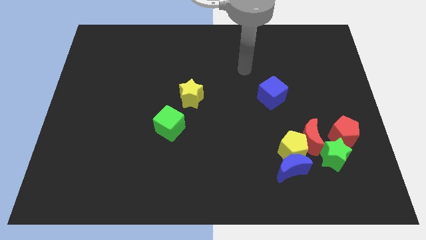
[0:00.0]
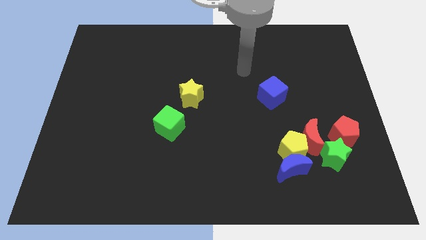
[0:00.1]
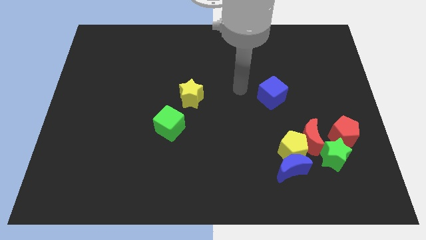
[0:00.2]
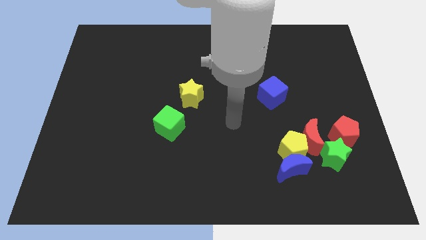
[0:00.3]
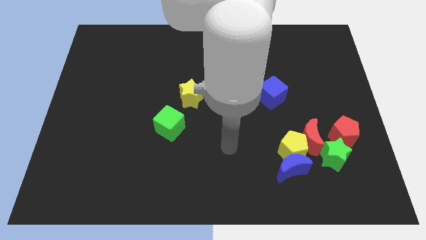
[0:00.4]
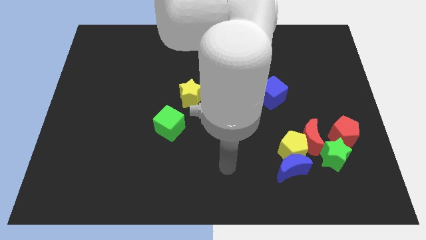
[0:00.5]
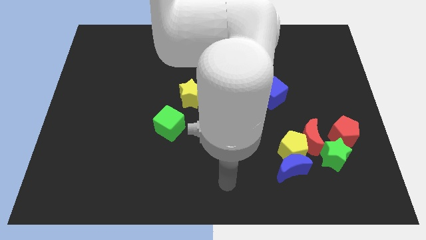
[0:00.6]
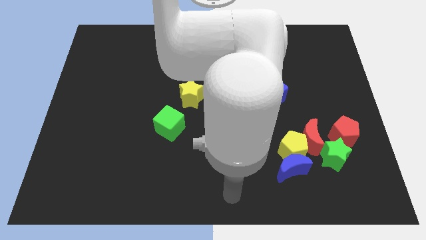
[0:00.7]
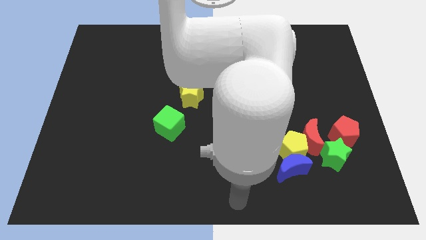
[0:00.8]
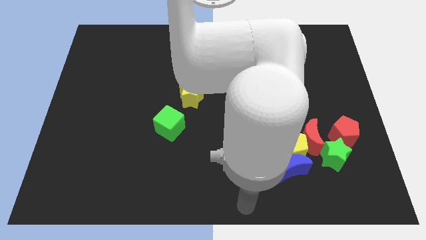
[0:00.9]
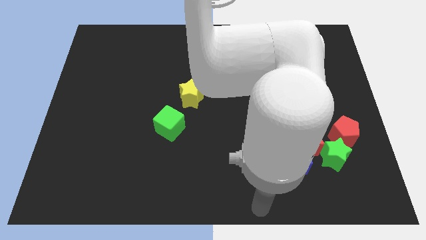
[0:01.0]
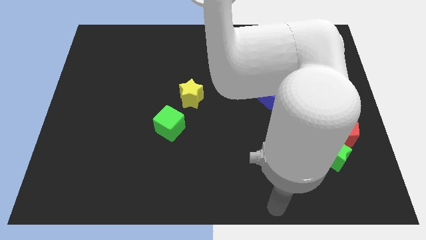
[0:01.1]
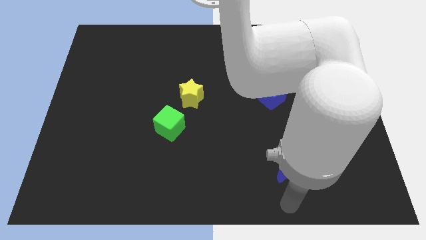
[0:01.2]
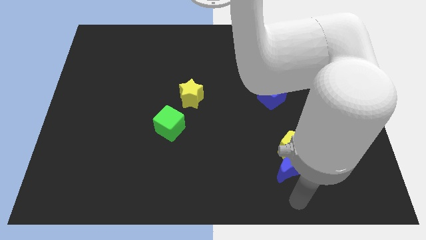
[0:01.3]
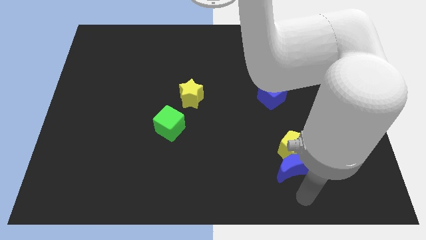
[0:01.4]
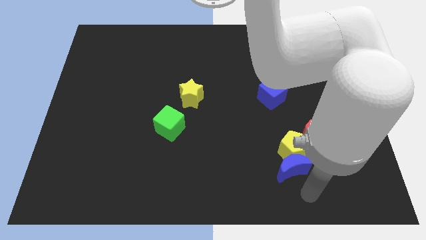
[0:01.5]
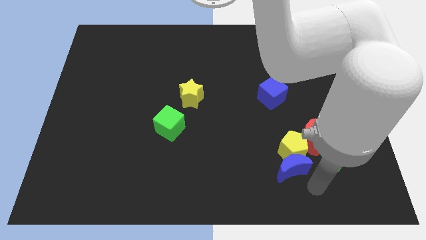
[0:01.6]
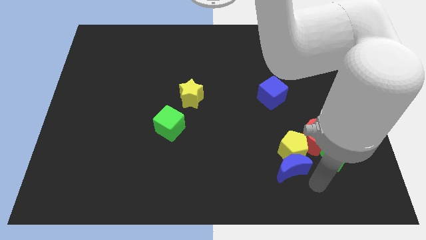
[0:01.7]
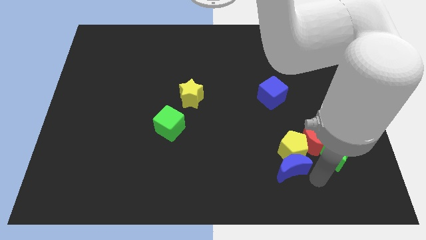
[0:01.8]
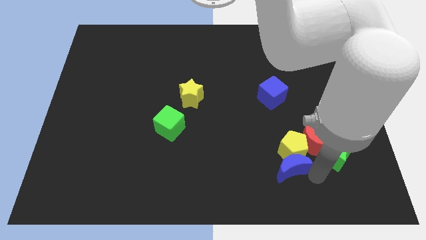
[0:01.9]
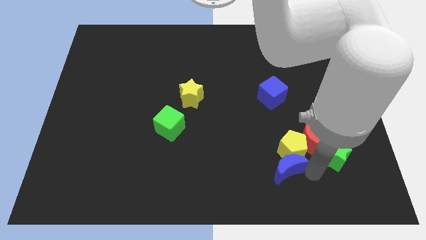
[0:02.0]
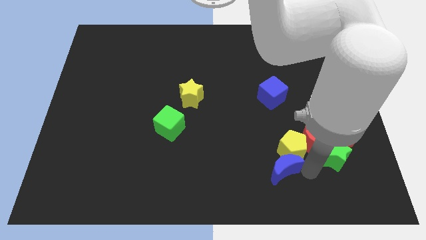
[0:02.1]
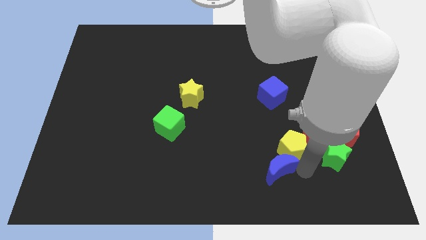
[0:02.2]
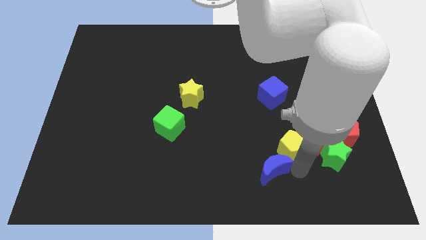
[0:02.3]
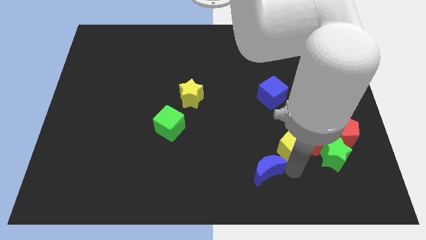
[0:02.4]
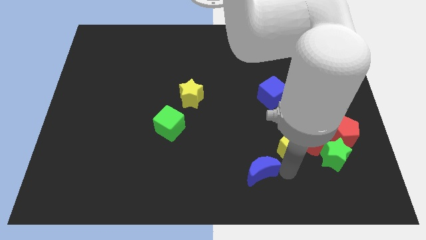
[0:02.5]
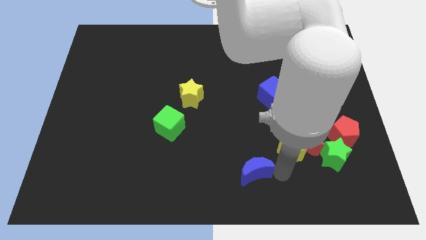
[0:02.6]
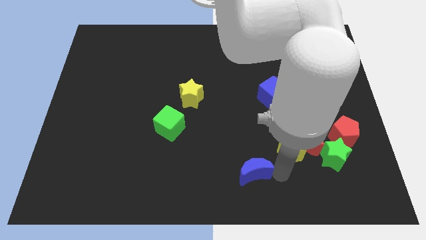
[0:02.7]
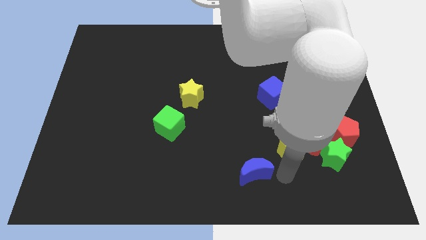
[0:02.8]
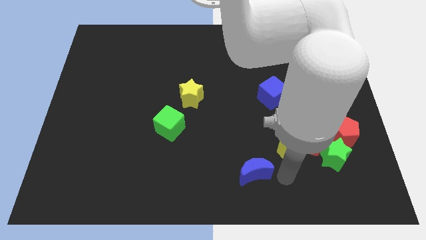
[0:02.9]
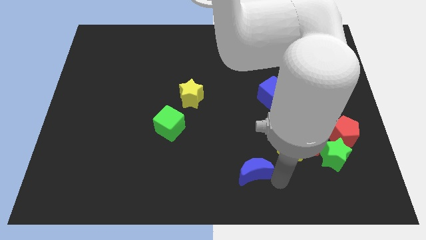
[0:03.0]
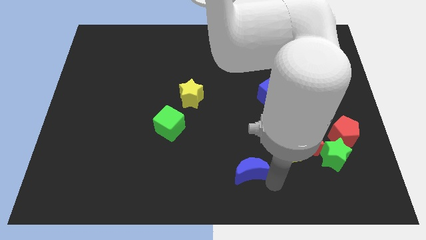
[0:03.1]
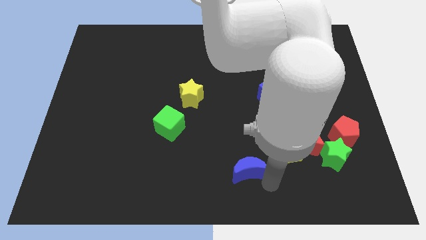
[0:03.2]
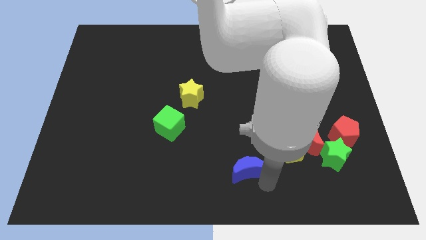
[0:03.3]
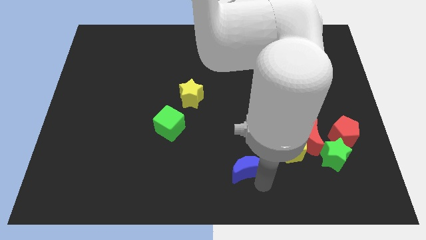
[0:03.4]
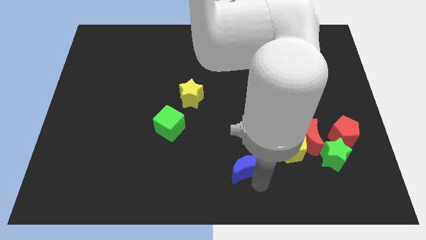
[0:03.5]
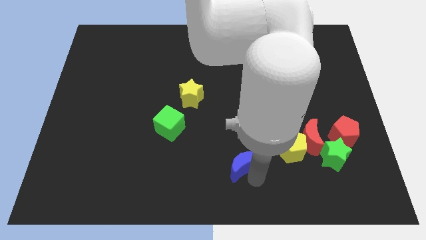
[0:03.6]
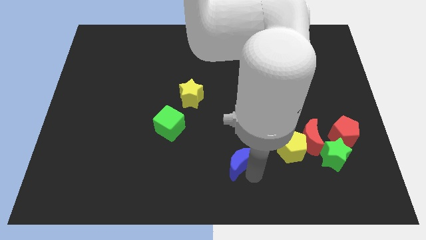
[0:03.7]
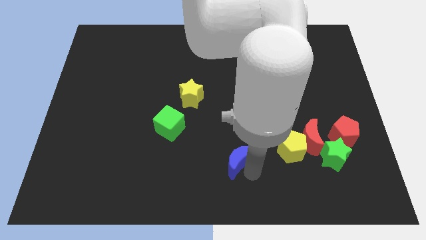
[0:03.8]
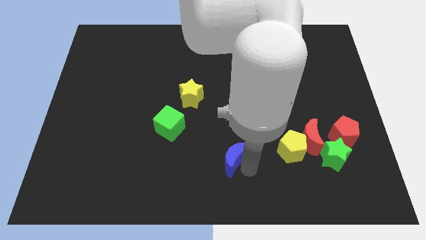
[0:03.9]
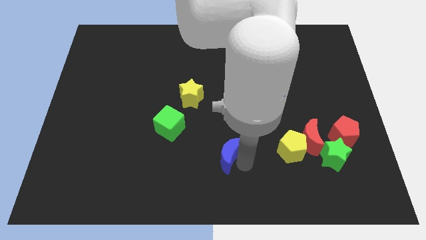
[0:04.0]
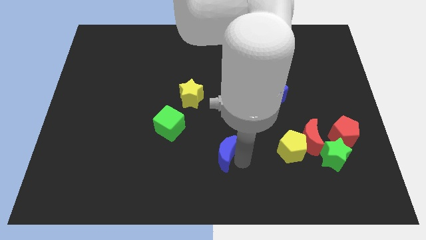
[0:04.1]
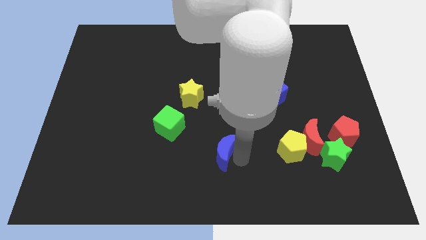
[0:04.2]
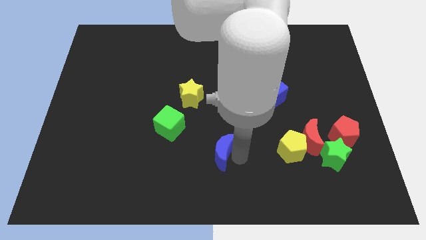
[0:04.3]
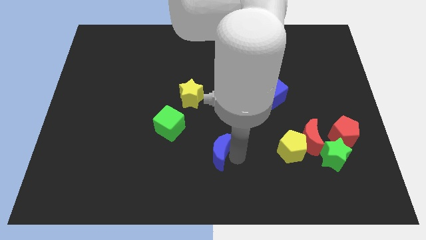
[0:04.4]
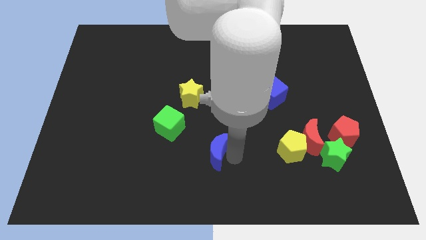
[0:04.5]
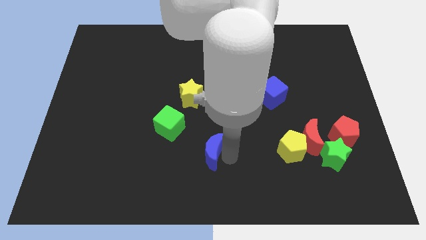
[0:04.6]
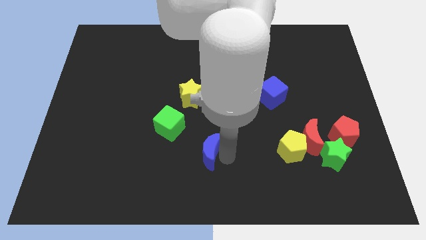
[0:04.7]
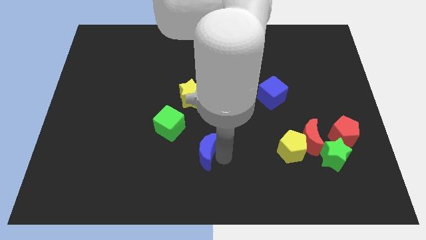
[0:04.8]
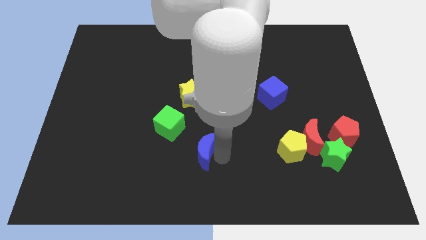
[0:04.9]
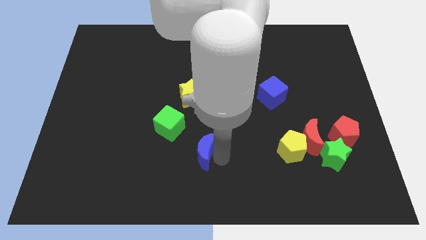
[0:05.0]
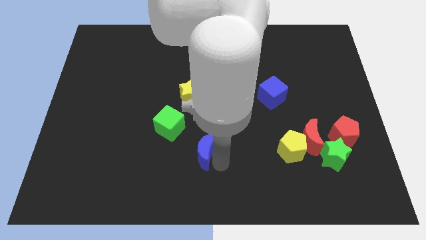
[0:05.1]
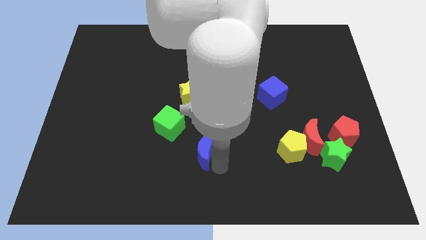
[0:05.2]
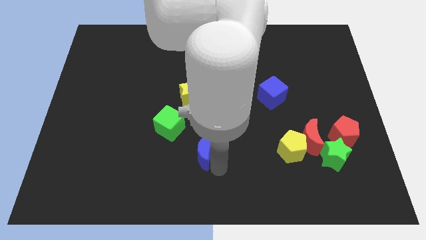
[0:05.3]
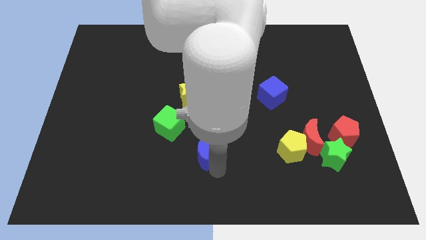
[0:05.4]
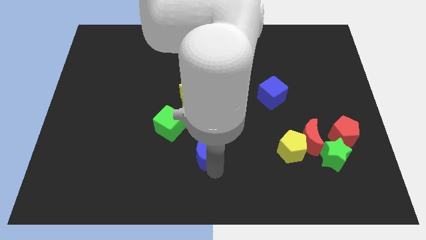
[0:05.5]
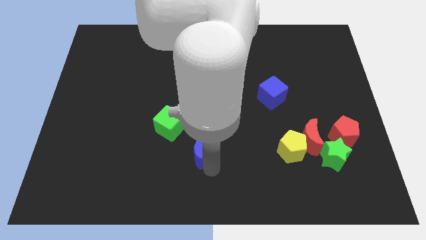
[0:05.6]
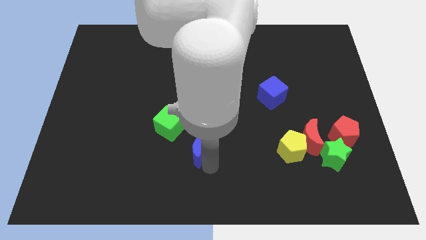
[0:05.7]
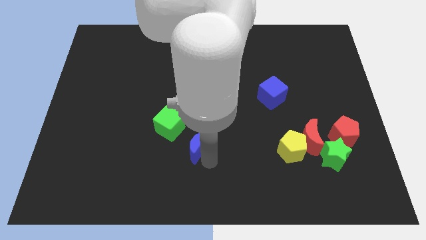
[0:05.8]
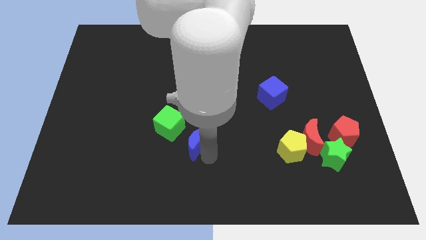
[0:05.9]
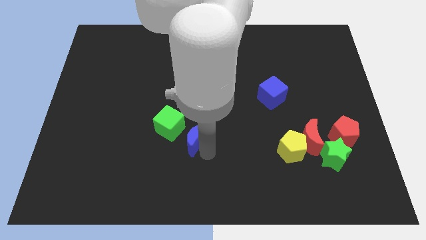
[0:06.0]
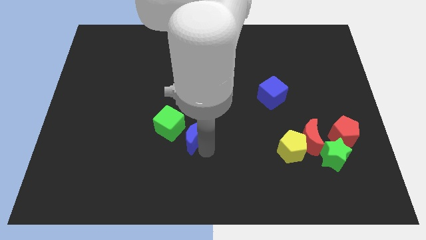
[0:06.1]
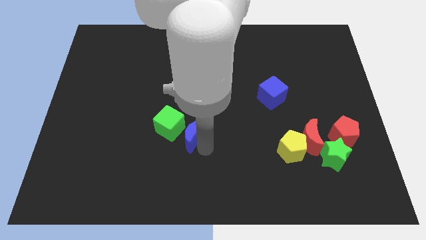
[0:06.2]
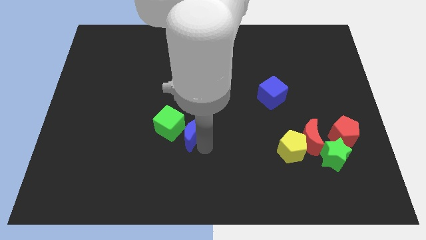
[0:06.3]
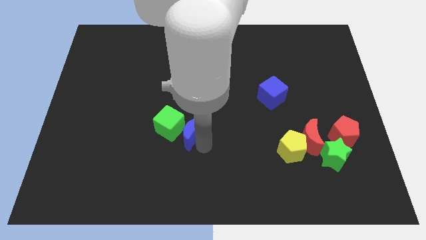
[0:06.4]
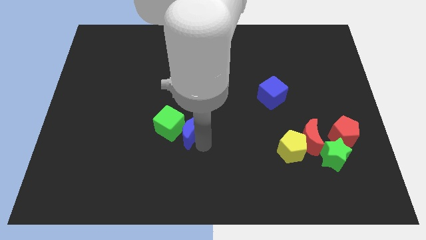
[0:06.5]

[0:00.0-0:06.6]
slide the blue moon close to the green cube

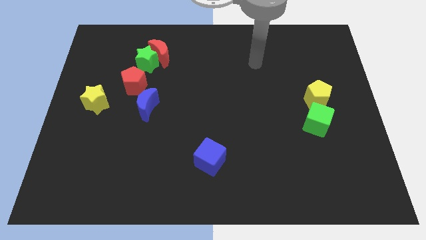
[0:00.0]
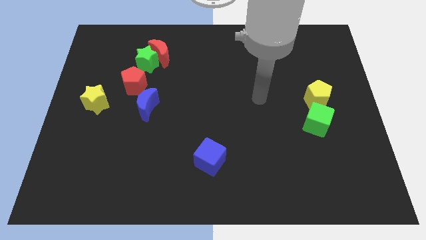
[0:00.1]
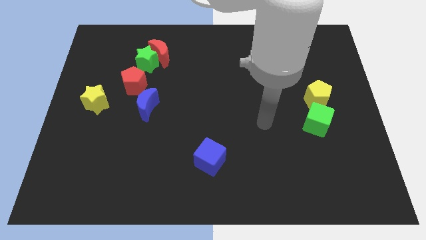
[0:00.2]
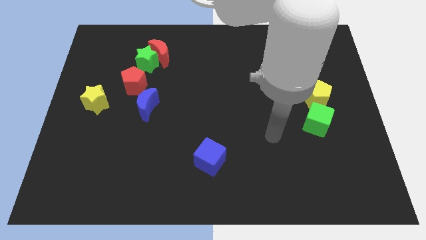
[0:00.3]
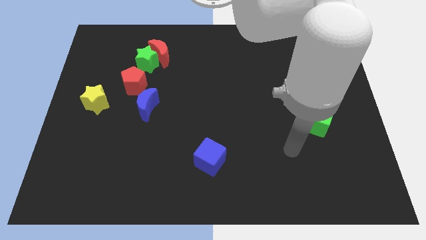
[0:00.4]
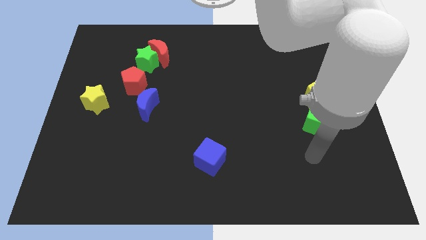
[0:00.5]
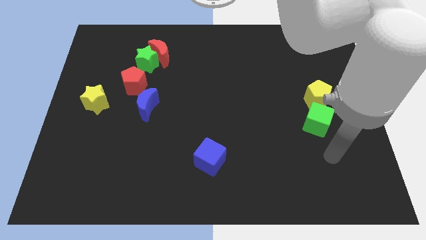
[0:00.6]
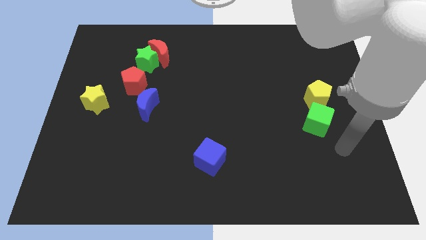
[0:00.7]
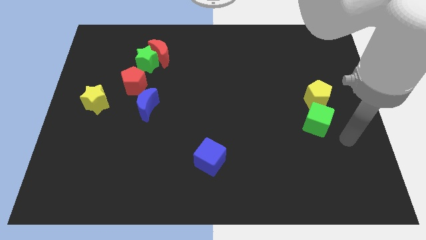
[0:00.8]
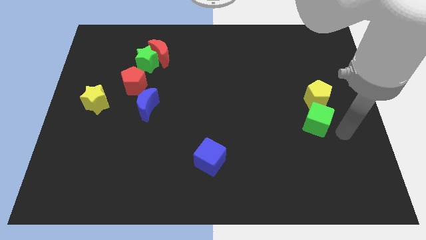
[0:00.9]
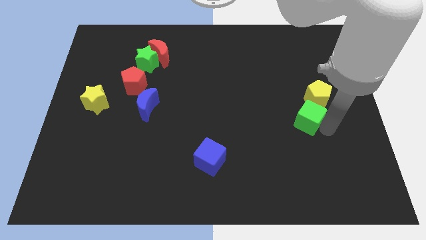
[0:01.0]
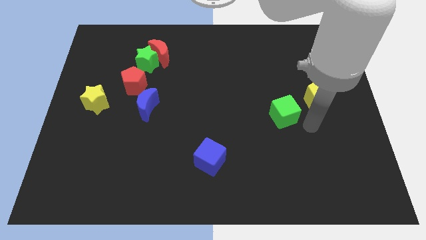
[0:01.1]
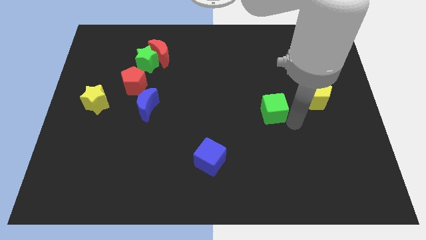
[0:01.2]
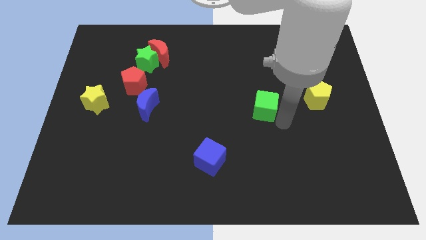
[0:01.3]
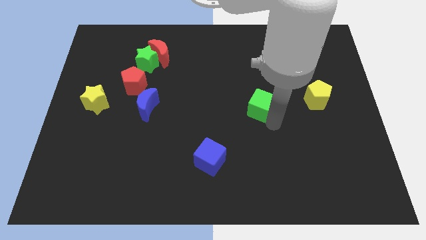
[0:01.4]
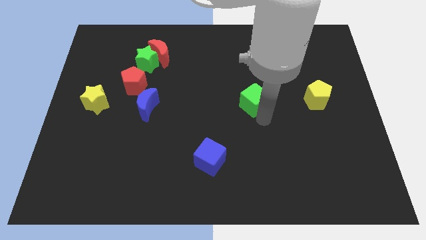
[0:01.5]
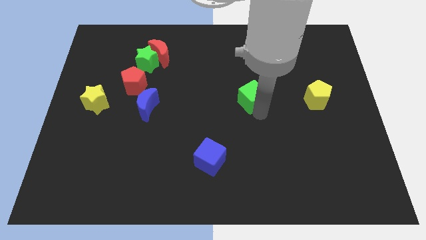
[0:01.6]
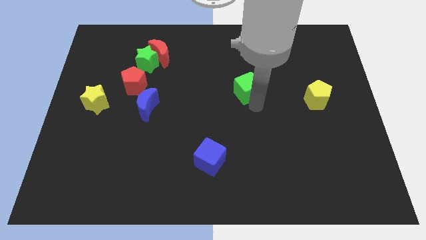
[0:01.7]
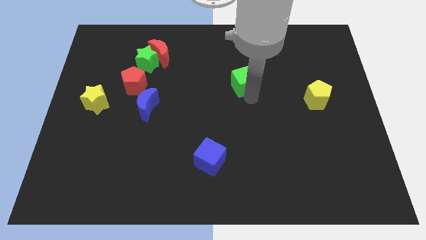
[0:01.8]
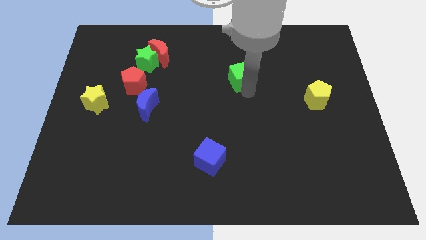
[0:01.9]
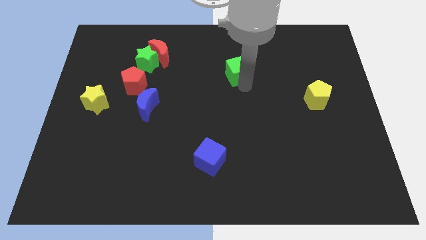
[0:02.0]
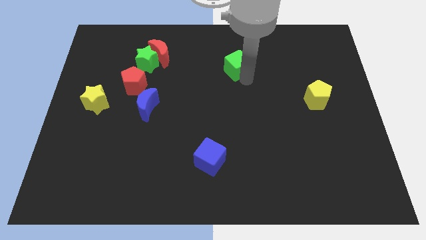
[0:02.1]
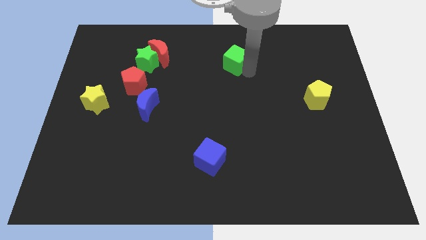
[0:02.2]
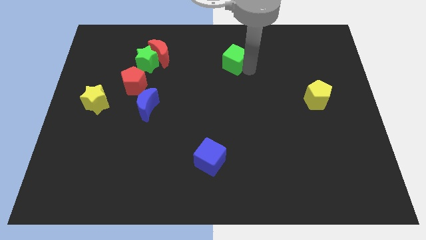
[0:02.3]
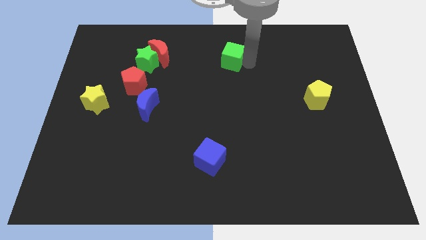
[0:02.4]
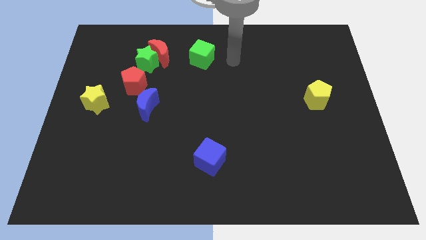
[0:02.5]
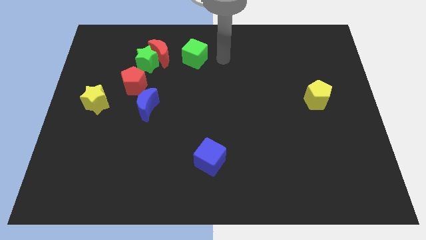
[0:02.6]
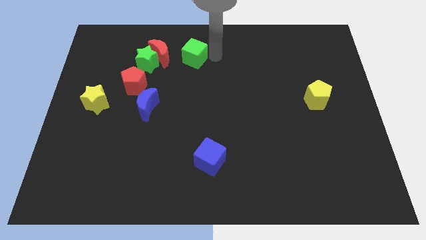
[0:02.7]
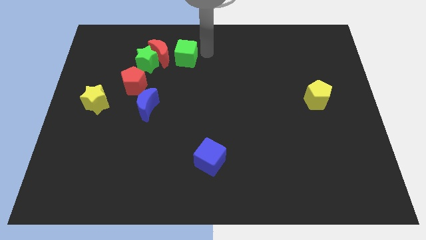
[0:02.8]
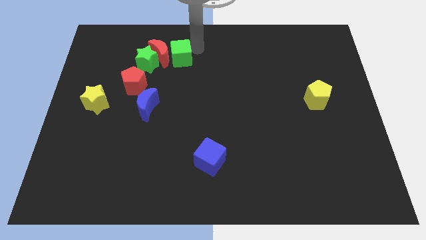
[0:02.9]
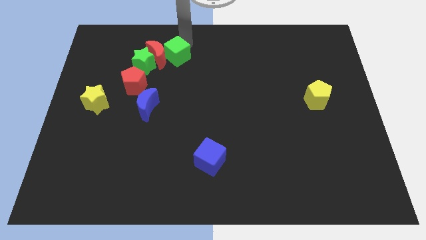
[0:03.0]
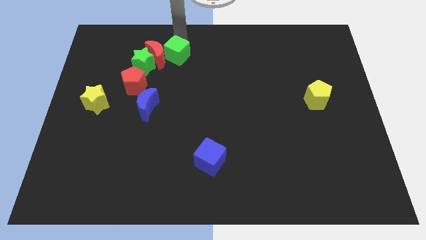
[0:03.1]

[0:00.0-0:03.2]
put the green cube to the red moon
